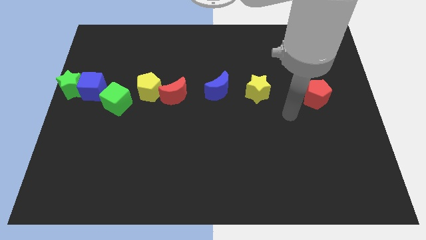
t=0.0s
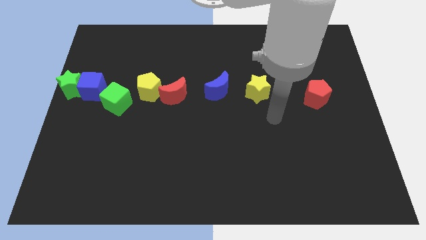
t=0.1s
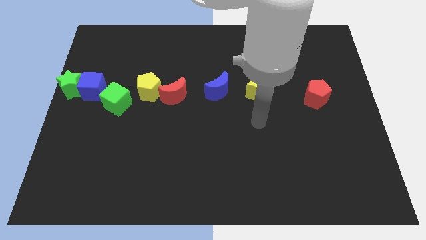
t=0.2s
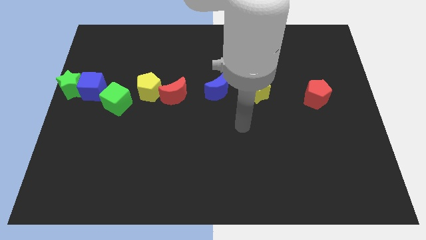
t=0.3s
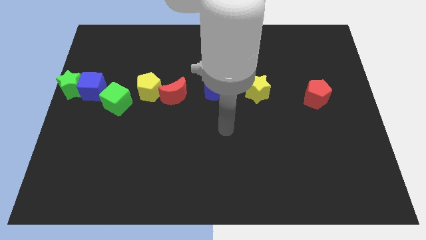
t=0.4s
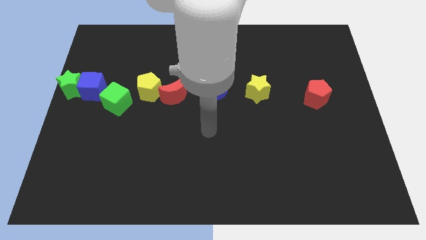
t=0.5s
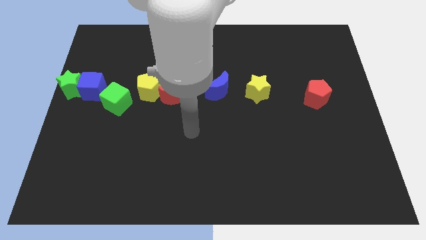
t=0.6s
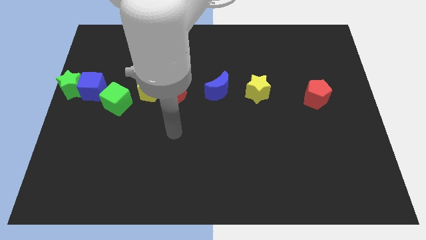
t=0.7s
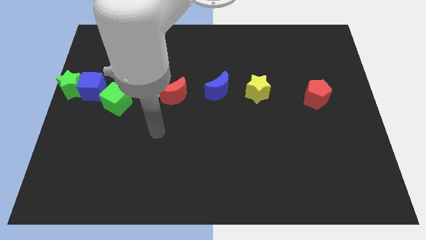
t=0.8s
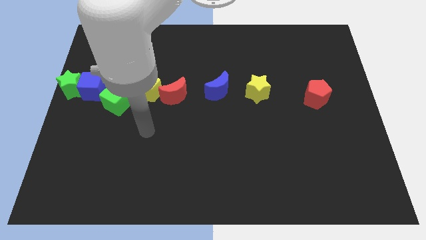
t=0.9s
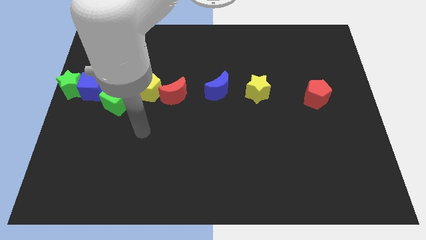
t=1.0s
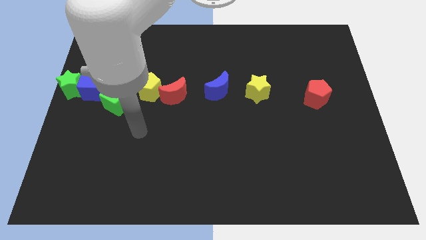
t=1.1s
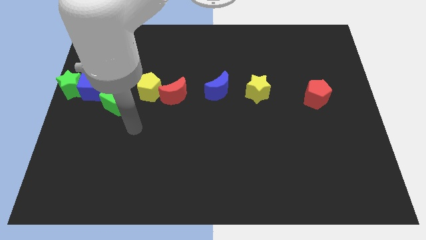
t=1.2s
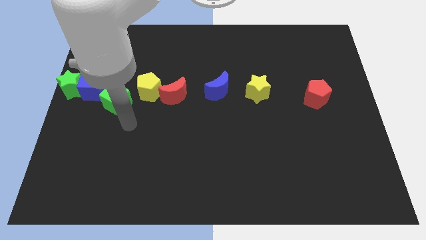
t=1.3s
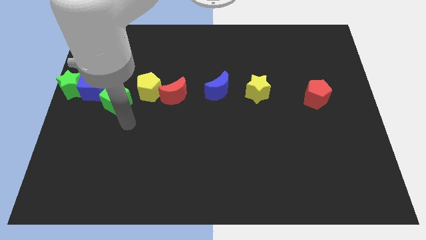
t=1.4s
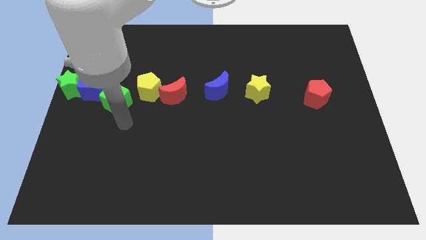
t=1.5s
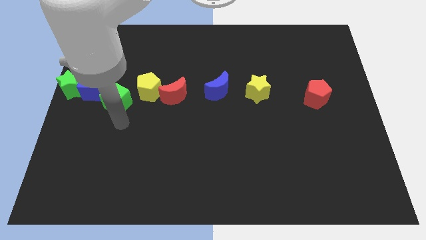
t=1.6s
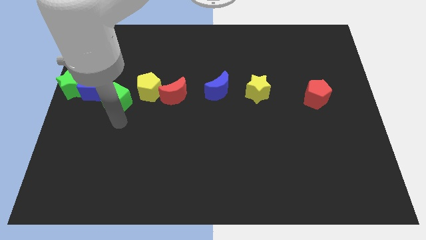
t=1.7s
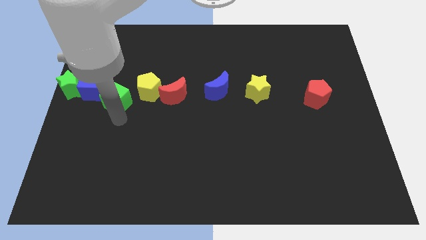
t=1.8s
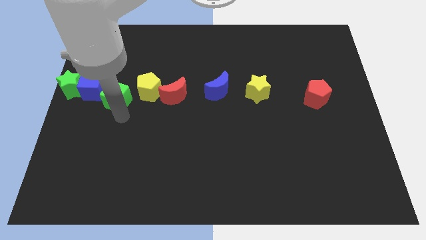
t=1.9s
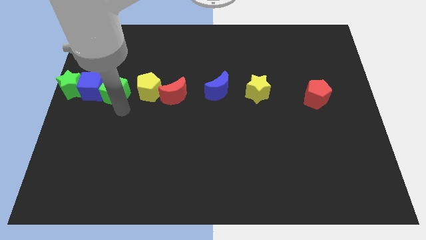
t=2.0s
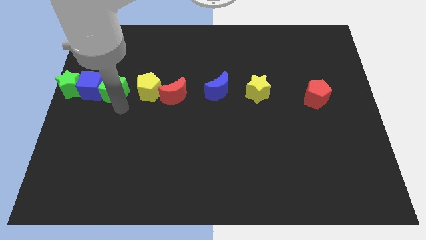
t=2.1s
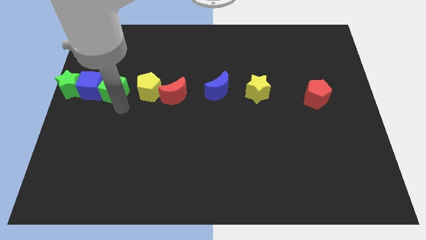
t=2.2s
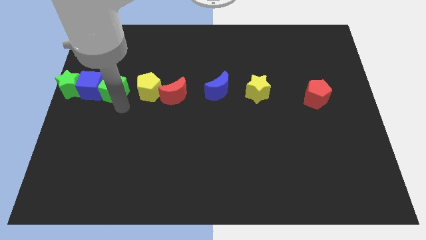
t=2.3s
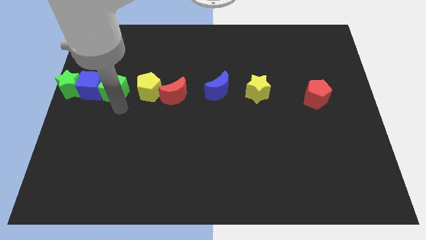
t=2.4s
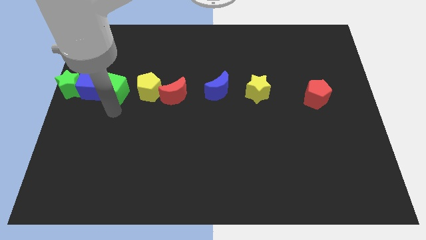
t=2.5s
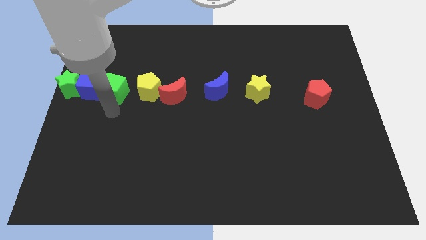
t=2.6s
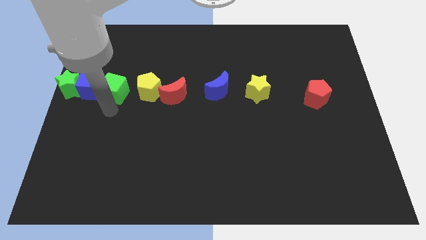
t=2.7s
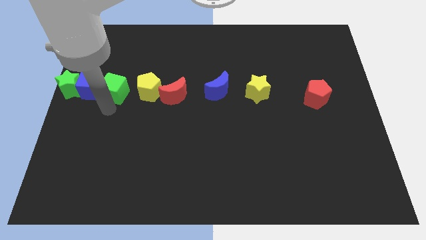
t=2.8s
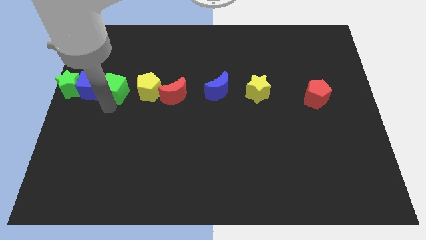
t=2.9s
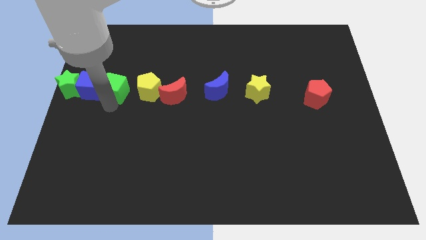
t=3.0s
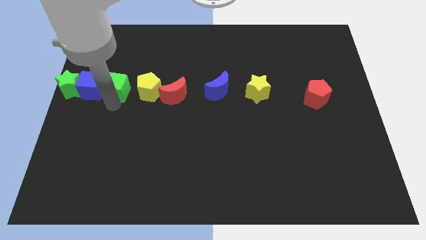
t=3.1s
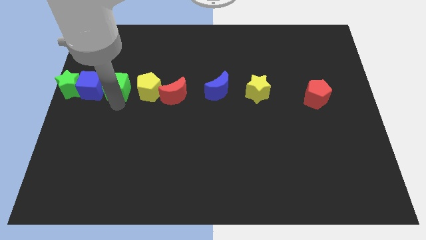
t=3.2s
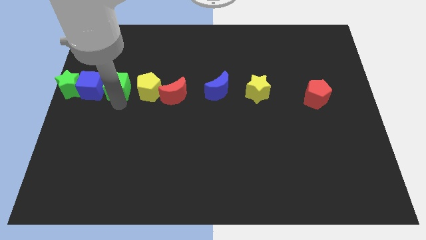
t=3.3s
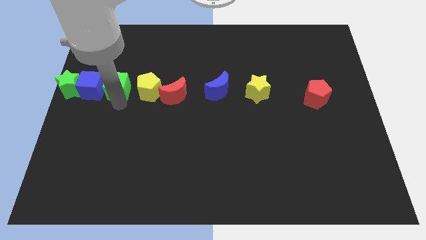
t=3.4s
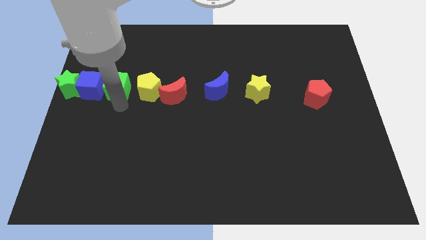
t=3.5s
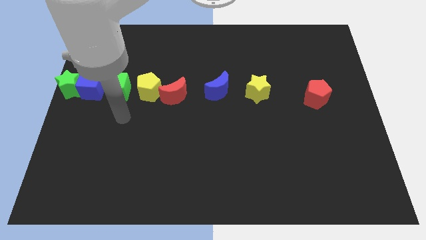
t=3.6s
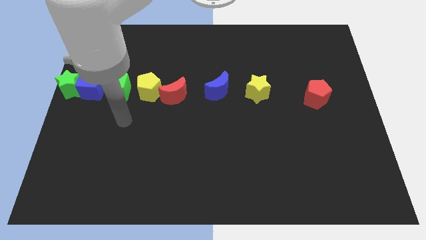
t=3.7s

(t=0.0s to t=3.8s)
place the green cube in between the blue cube and yellow pentagon

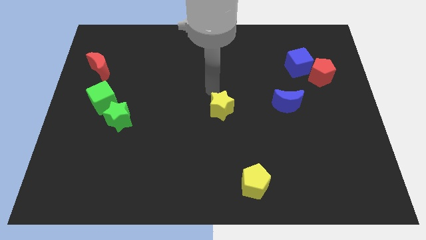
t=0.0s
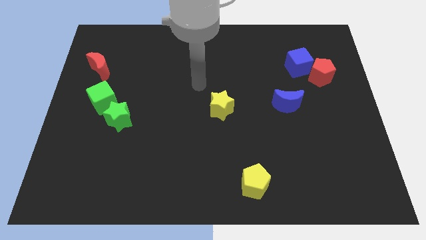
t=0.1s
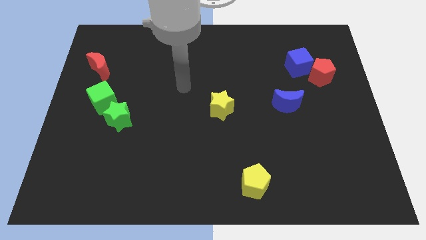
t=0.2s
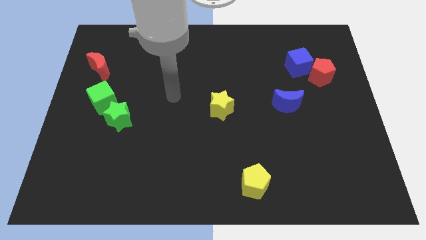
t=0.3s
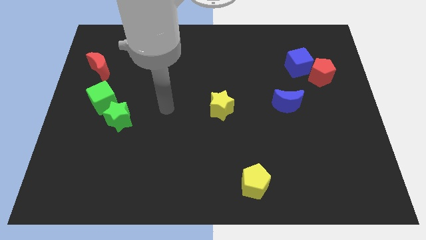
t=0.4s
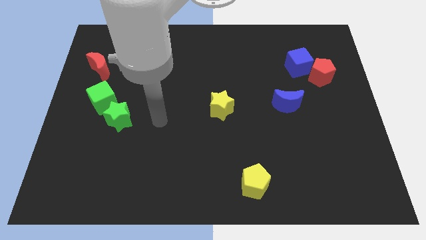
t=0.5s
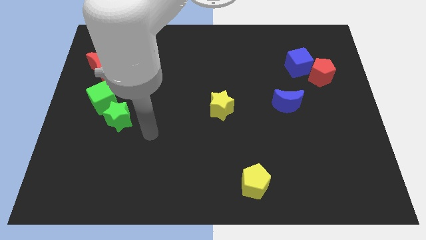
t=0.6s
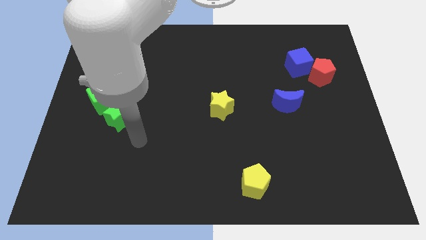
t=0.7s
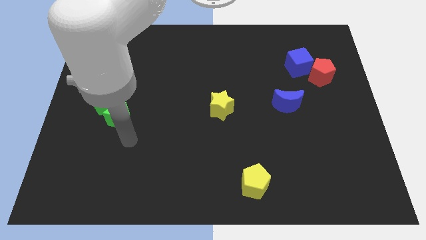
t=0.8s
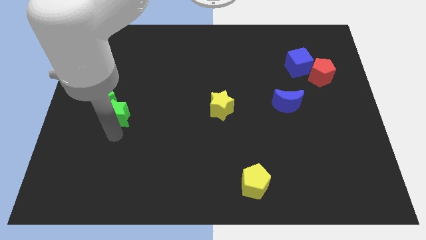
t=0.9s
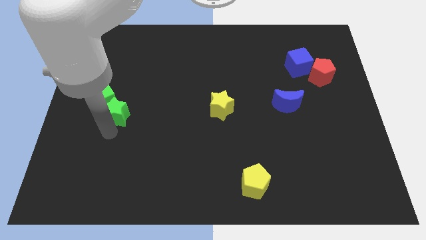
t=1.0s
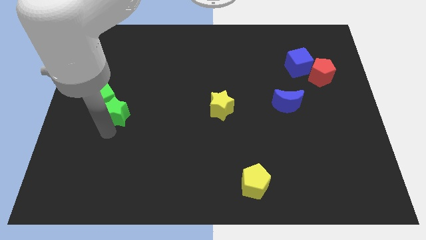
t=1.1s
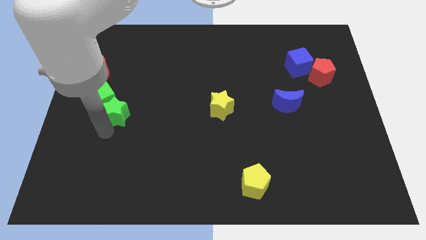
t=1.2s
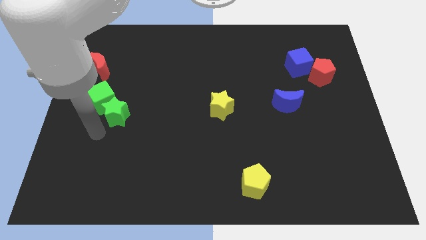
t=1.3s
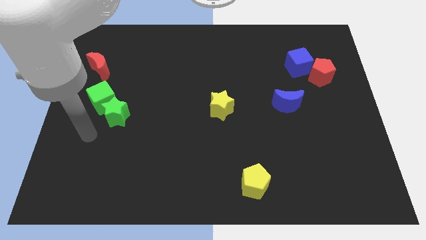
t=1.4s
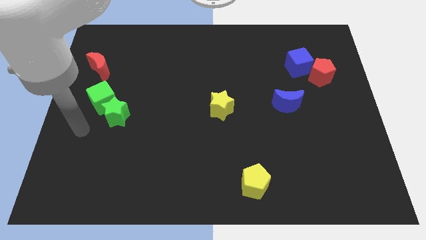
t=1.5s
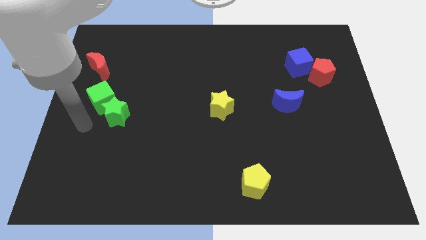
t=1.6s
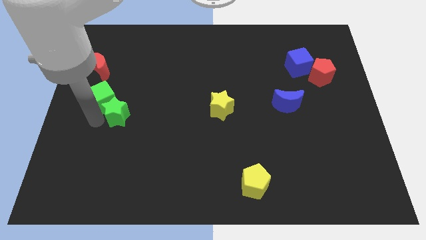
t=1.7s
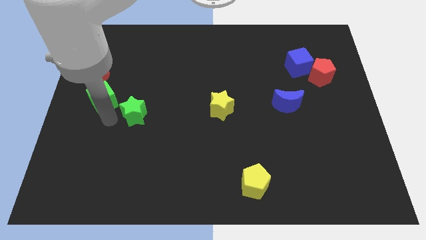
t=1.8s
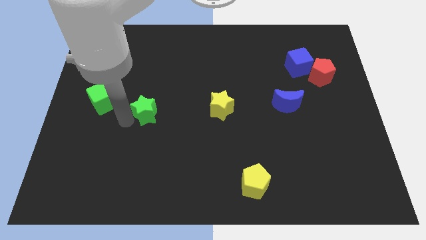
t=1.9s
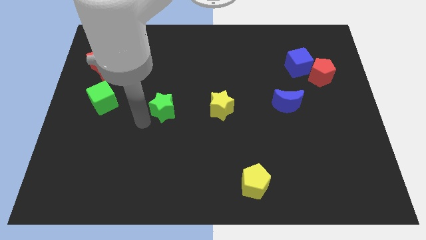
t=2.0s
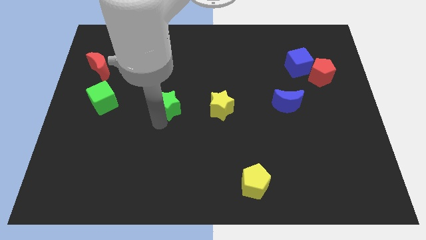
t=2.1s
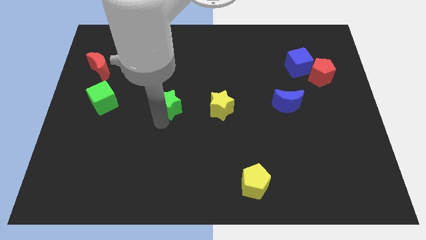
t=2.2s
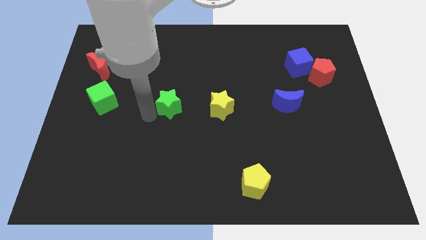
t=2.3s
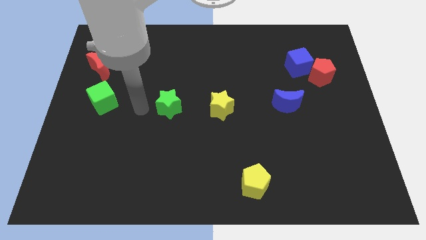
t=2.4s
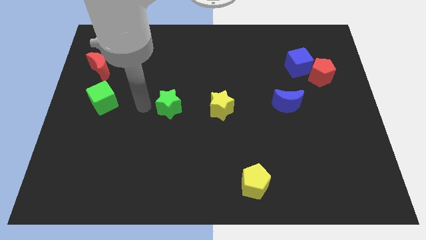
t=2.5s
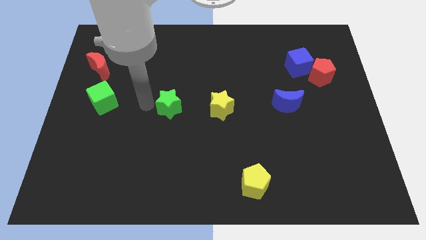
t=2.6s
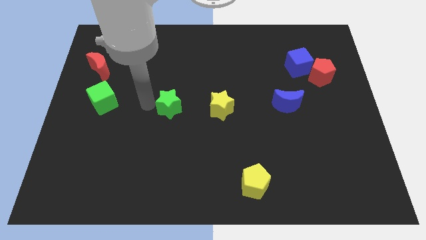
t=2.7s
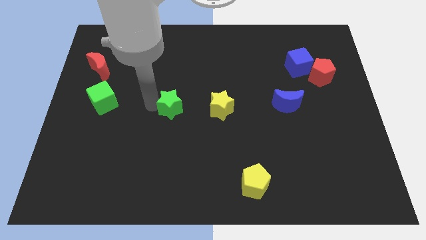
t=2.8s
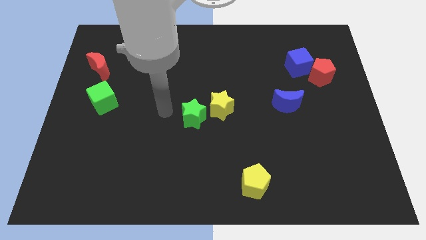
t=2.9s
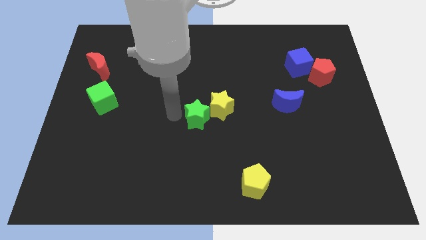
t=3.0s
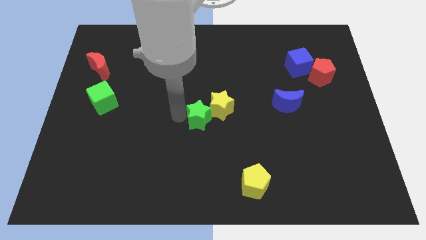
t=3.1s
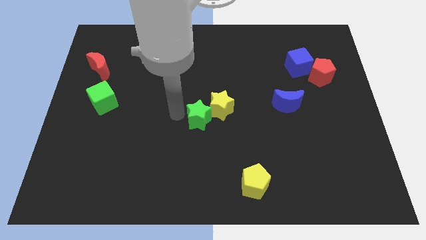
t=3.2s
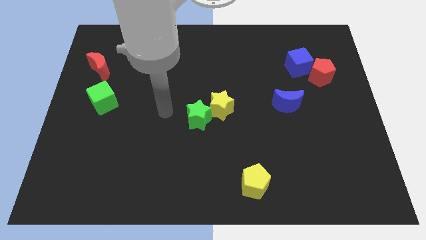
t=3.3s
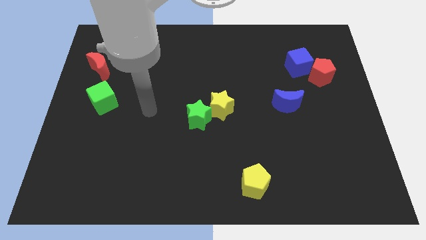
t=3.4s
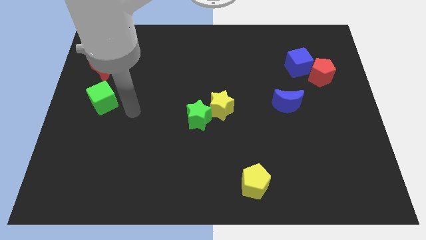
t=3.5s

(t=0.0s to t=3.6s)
push the green star towards the yellow star

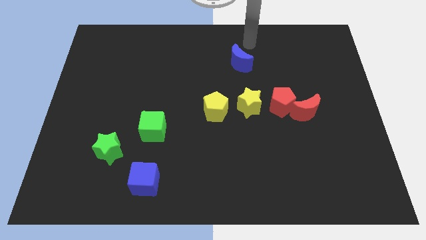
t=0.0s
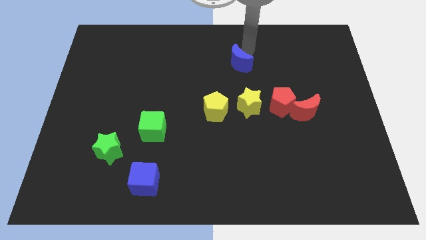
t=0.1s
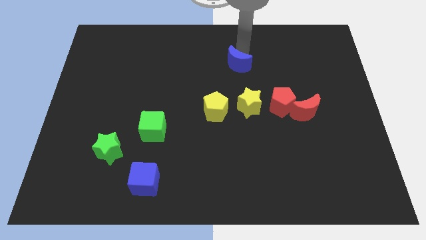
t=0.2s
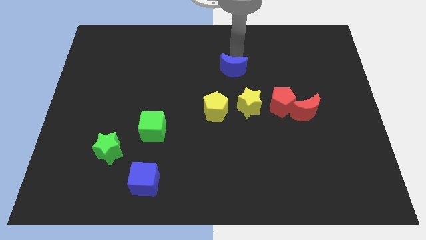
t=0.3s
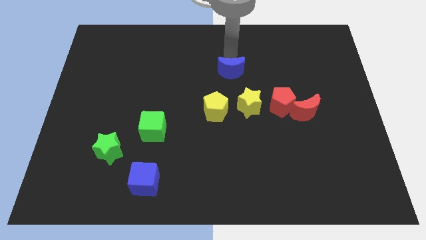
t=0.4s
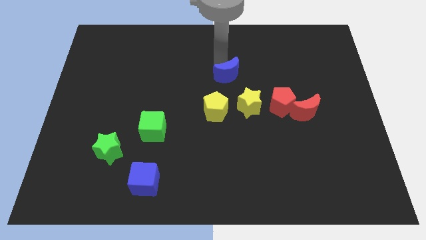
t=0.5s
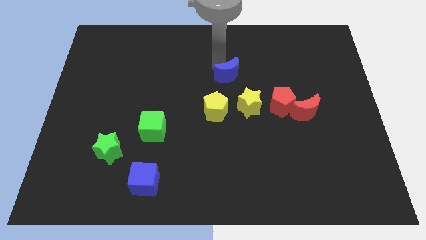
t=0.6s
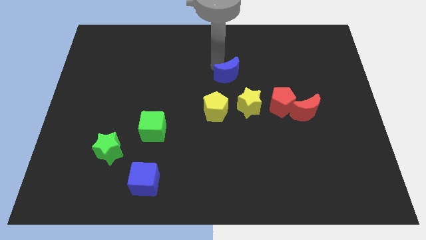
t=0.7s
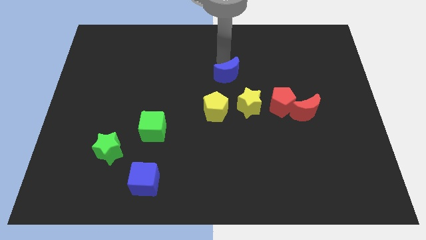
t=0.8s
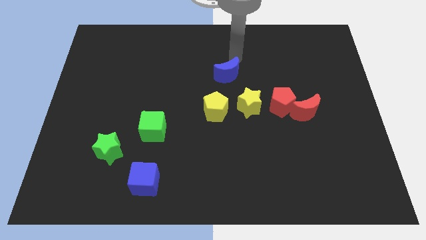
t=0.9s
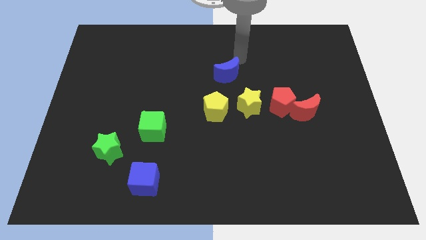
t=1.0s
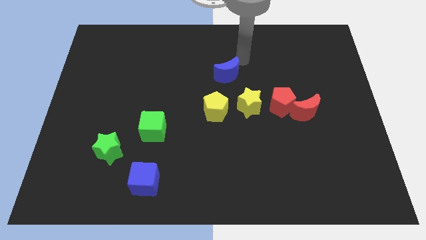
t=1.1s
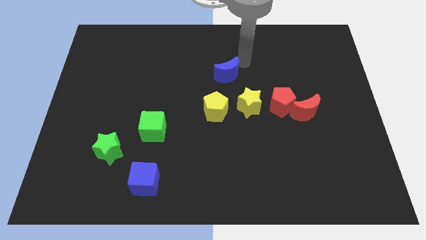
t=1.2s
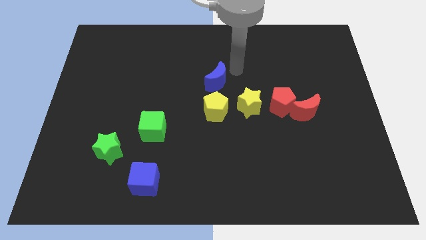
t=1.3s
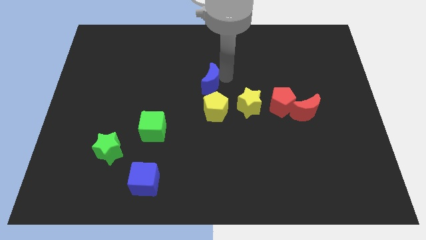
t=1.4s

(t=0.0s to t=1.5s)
push the blue crescent to the top of yellow pentagon
